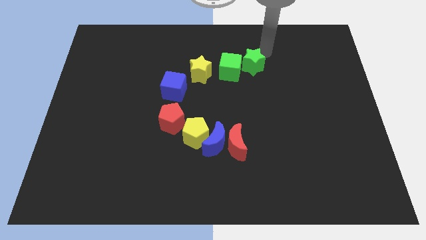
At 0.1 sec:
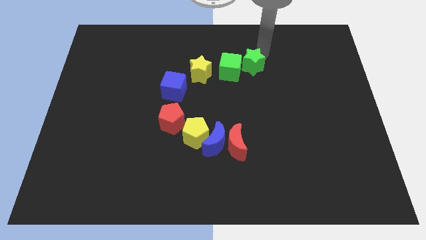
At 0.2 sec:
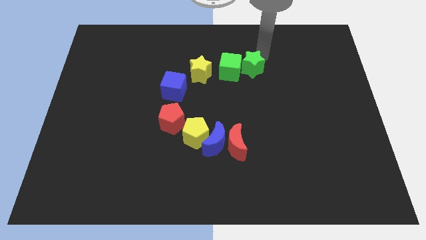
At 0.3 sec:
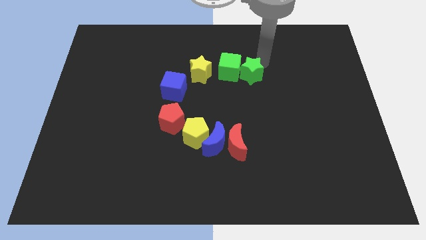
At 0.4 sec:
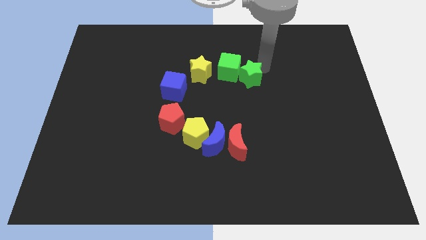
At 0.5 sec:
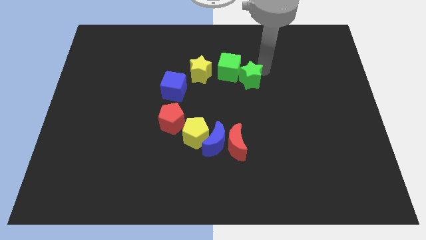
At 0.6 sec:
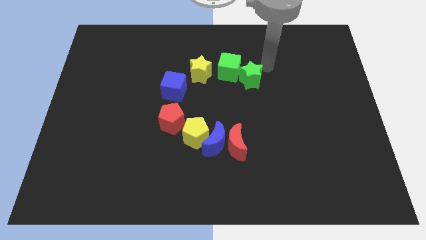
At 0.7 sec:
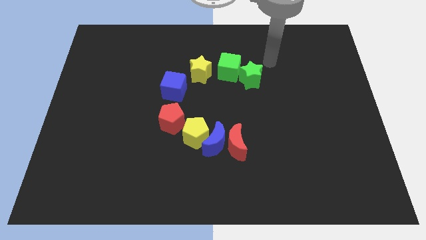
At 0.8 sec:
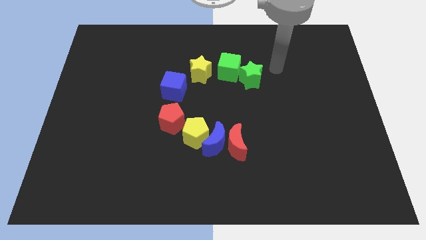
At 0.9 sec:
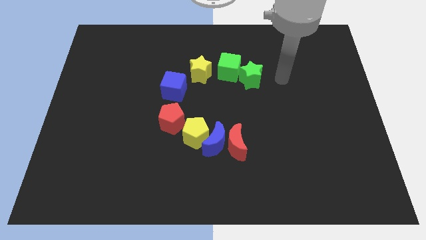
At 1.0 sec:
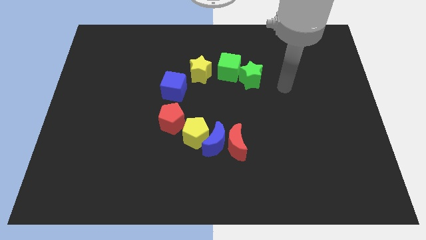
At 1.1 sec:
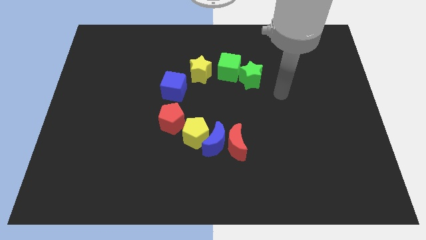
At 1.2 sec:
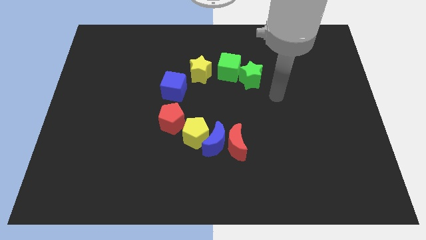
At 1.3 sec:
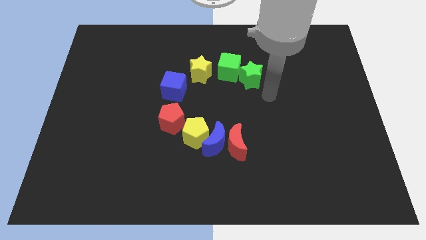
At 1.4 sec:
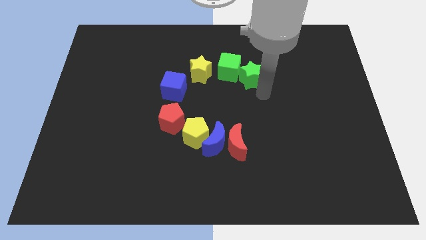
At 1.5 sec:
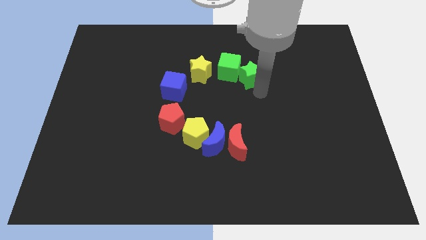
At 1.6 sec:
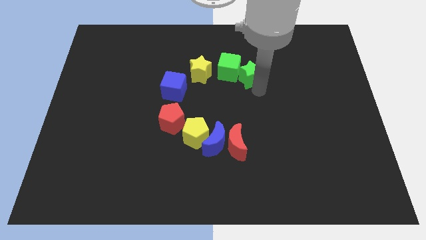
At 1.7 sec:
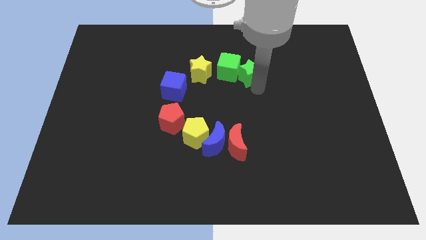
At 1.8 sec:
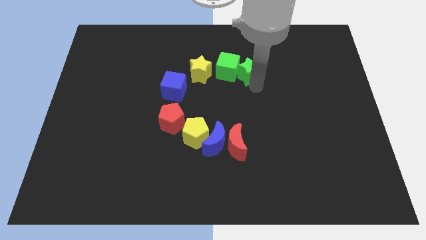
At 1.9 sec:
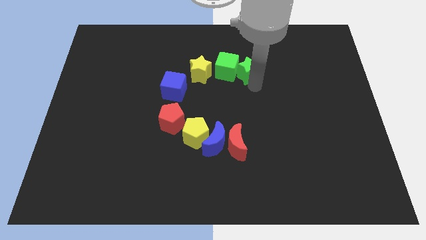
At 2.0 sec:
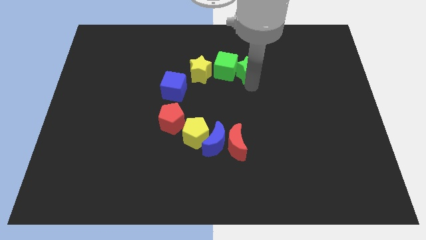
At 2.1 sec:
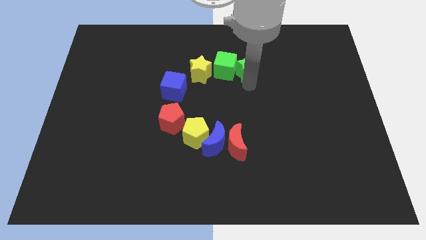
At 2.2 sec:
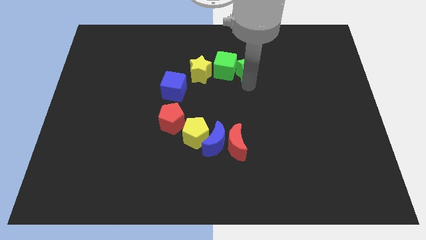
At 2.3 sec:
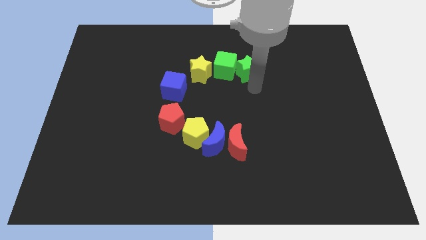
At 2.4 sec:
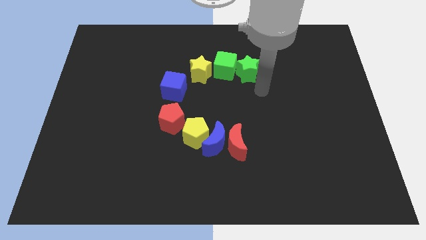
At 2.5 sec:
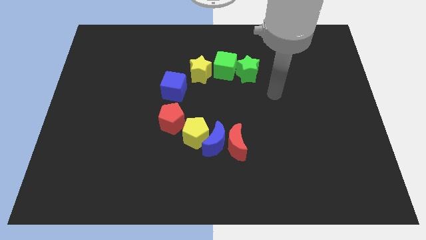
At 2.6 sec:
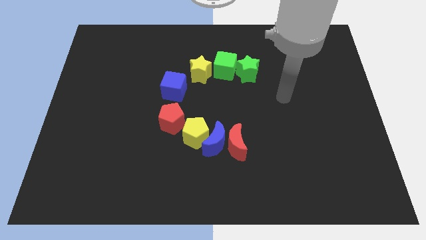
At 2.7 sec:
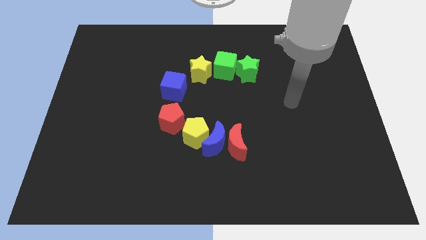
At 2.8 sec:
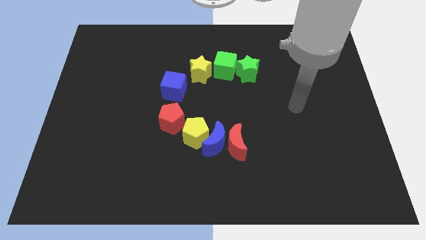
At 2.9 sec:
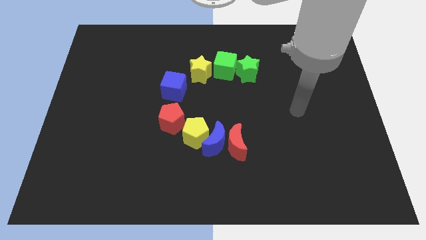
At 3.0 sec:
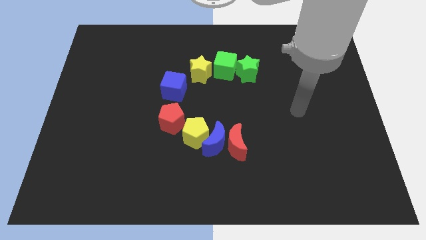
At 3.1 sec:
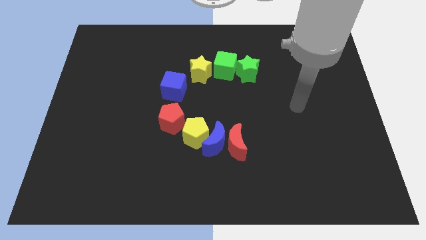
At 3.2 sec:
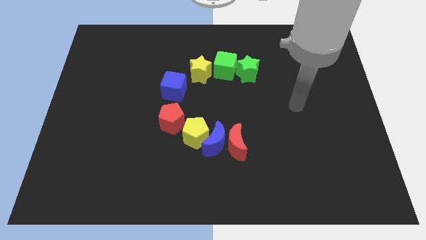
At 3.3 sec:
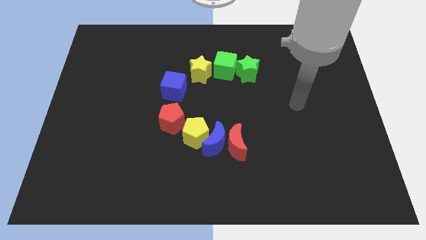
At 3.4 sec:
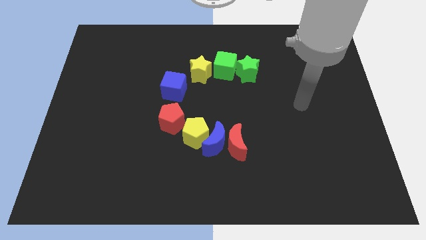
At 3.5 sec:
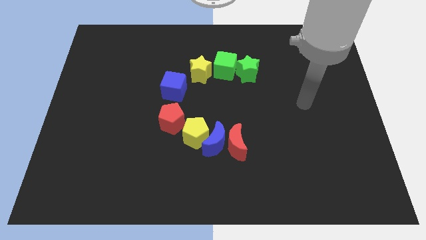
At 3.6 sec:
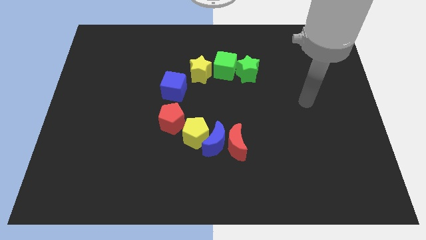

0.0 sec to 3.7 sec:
move your arm away from the green star

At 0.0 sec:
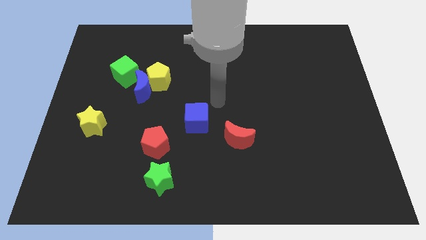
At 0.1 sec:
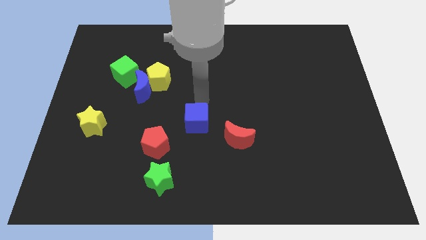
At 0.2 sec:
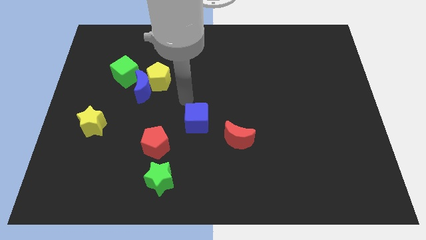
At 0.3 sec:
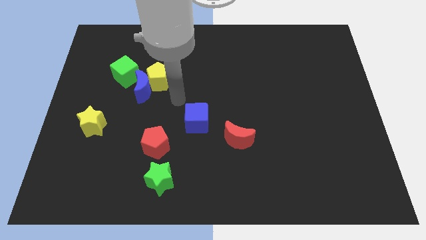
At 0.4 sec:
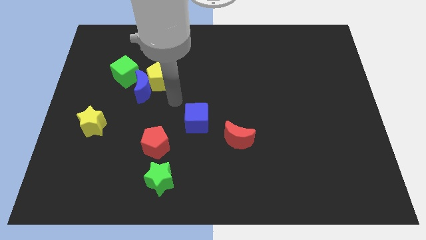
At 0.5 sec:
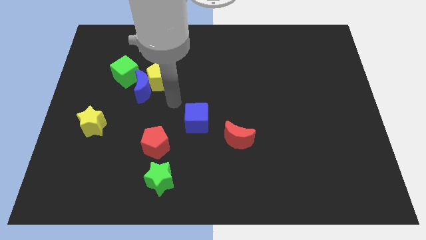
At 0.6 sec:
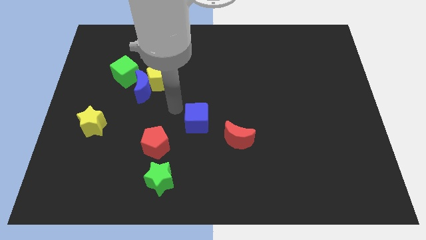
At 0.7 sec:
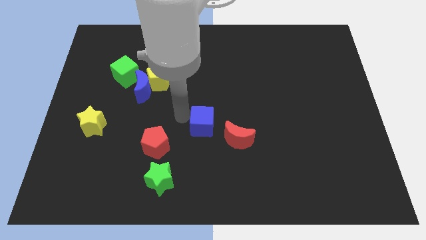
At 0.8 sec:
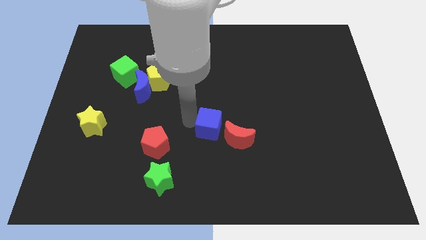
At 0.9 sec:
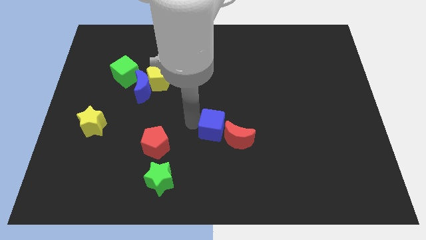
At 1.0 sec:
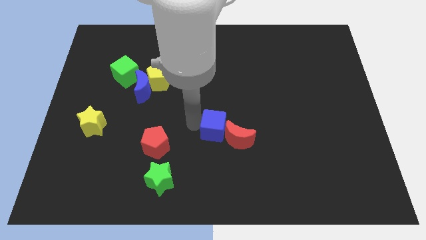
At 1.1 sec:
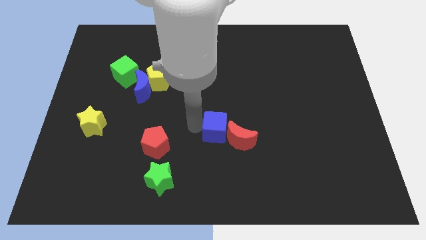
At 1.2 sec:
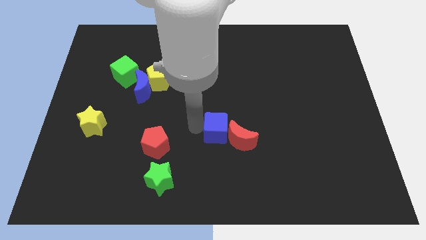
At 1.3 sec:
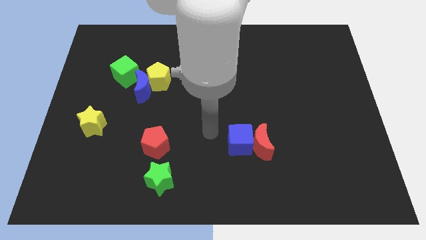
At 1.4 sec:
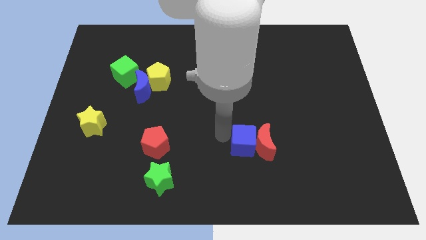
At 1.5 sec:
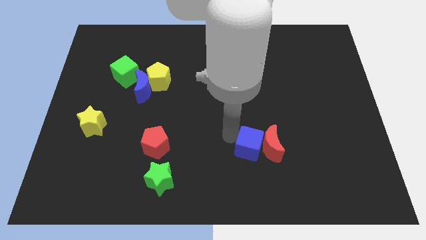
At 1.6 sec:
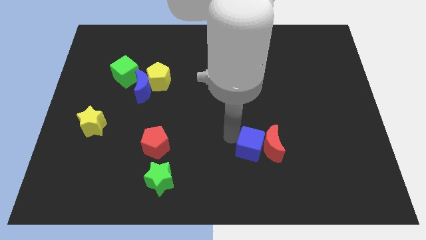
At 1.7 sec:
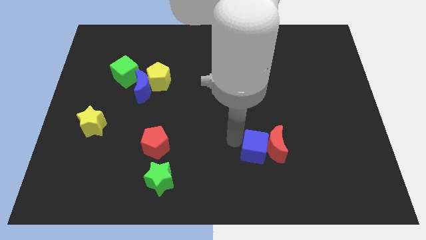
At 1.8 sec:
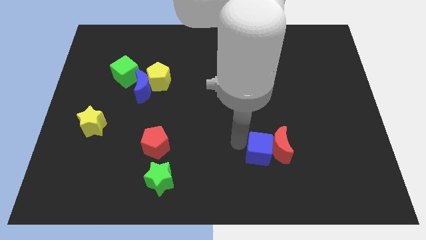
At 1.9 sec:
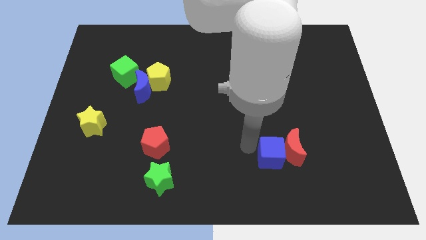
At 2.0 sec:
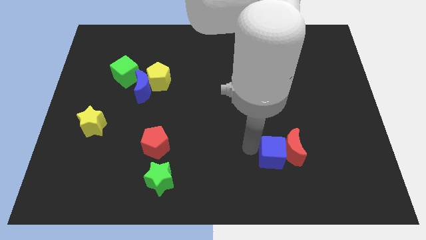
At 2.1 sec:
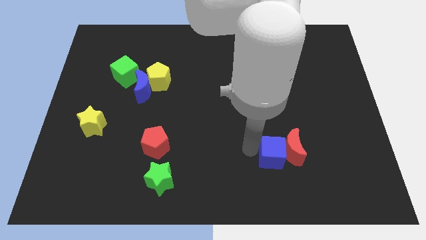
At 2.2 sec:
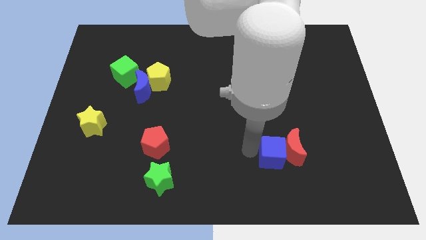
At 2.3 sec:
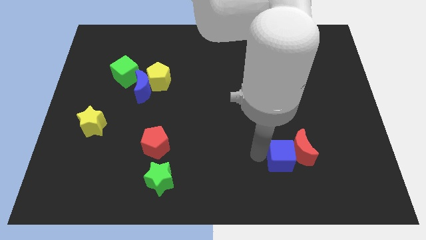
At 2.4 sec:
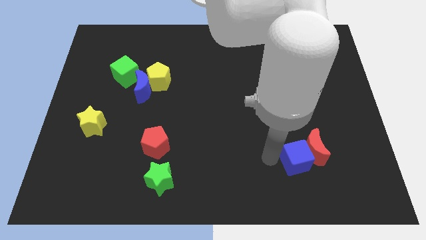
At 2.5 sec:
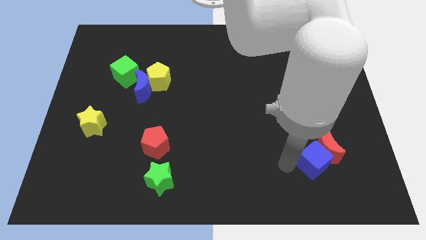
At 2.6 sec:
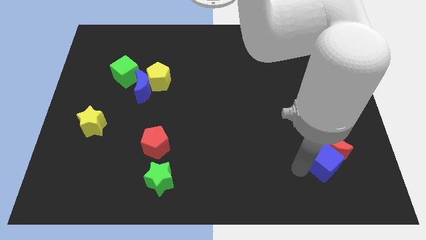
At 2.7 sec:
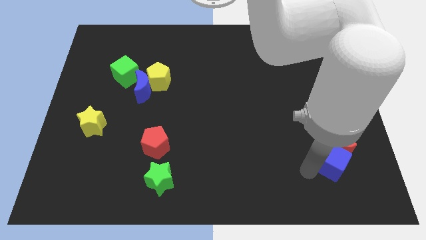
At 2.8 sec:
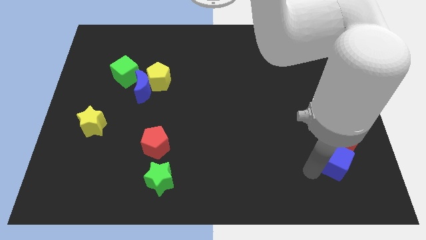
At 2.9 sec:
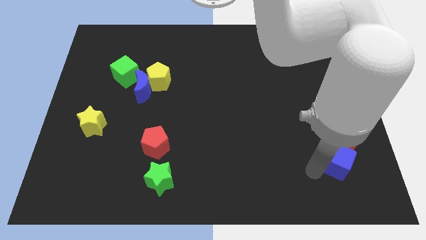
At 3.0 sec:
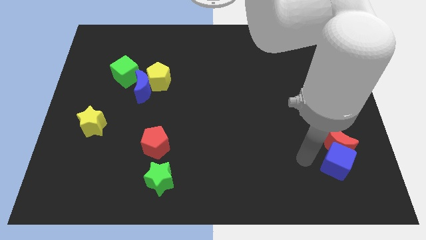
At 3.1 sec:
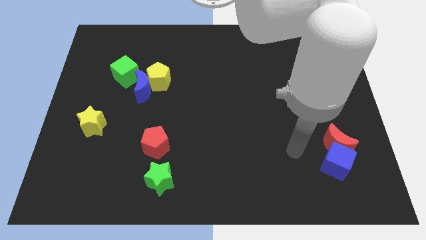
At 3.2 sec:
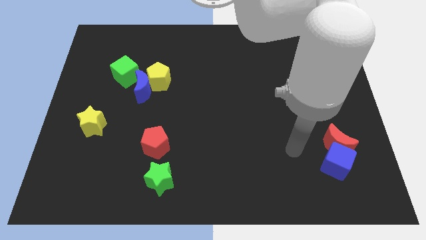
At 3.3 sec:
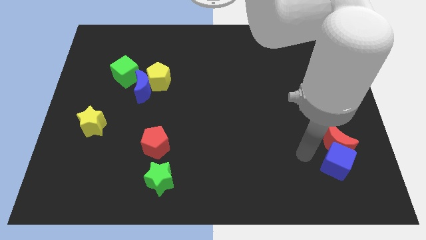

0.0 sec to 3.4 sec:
move the blue cube to the bottom right of the board

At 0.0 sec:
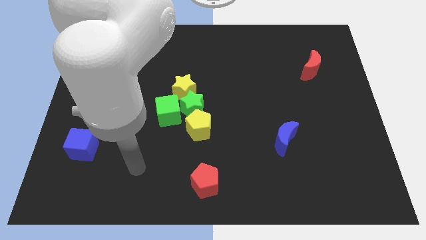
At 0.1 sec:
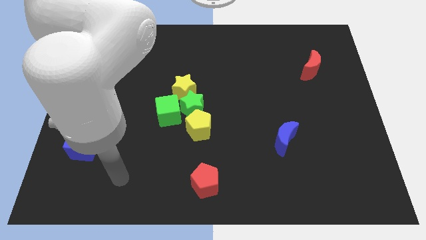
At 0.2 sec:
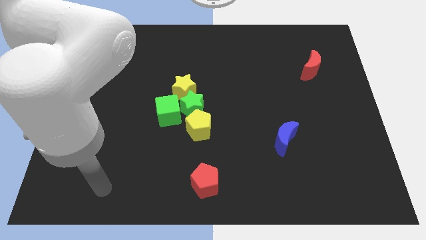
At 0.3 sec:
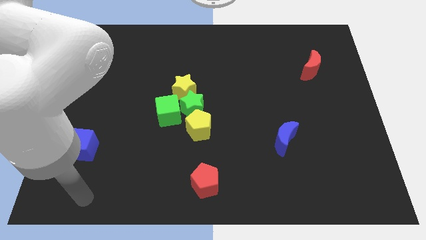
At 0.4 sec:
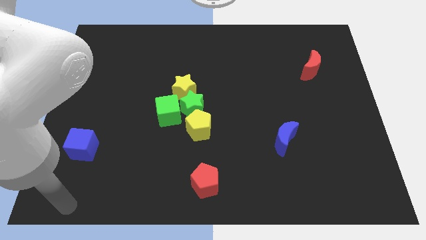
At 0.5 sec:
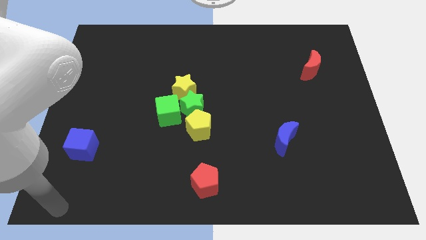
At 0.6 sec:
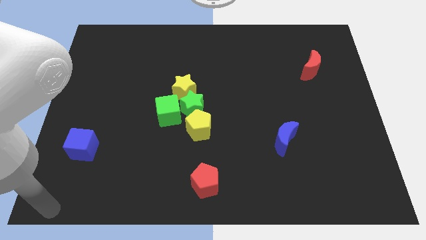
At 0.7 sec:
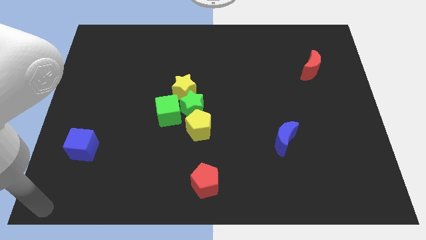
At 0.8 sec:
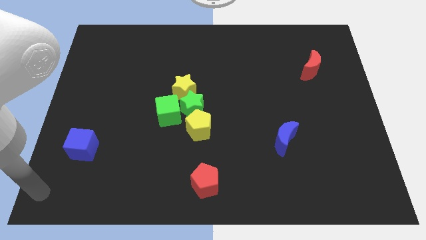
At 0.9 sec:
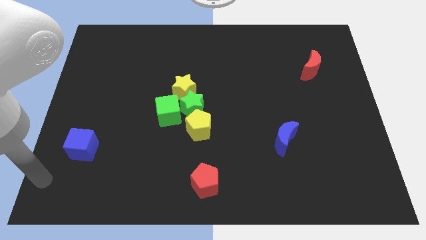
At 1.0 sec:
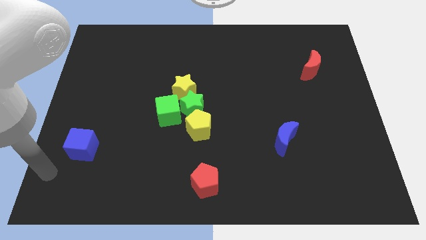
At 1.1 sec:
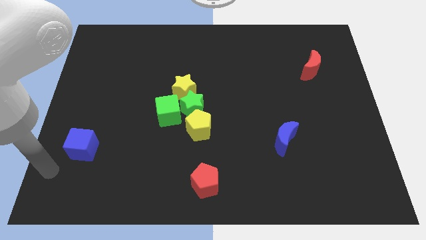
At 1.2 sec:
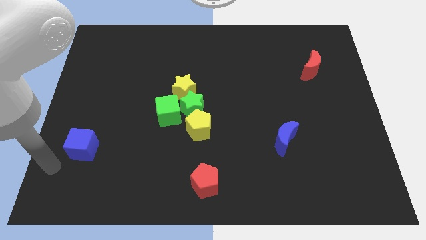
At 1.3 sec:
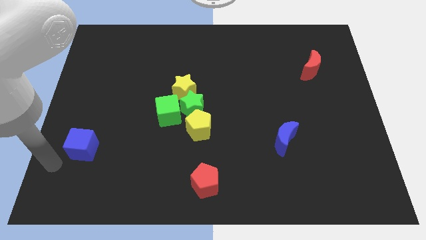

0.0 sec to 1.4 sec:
move arm to the bottom left of blue cube

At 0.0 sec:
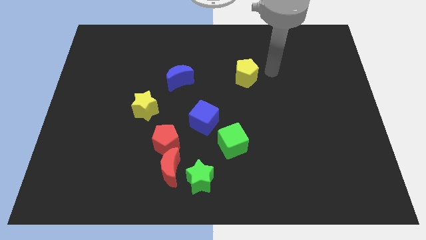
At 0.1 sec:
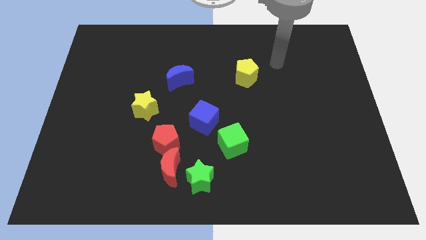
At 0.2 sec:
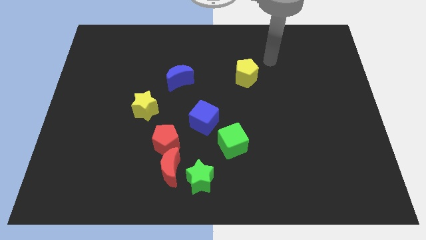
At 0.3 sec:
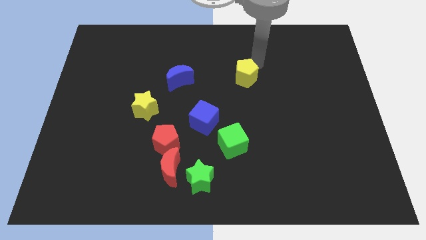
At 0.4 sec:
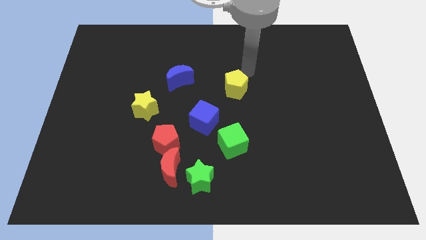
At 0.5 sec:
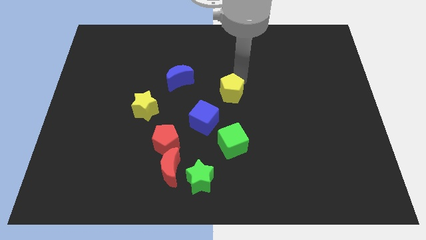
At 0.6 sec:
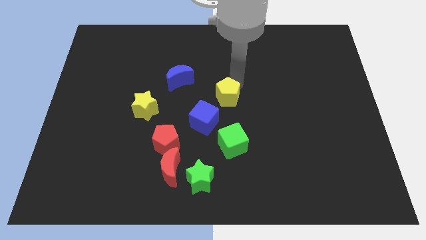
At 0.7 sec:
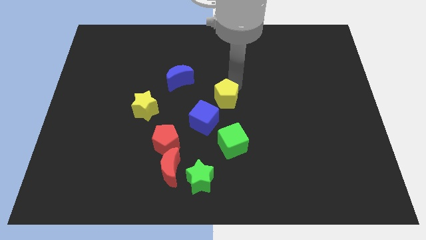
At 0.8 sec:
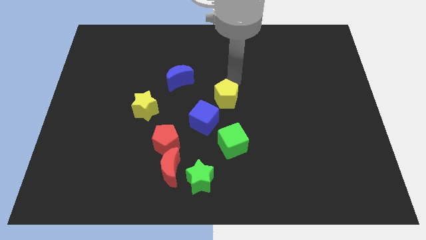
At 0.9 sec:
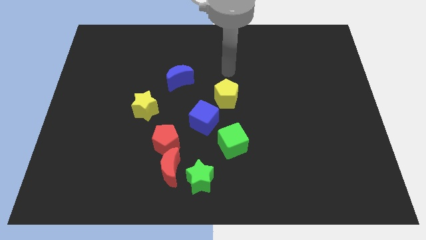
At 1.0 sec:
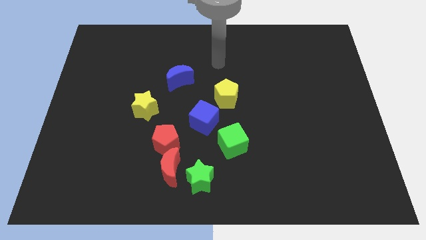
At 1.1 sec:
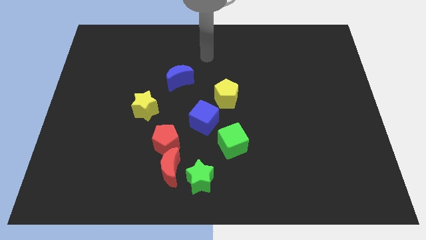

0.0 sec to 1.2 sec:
slide yellow pentagon above green cube
